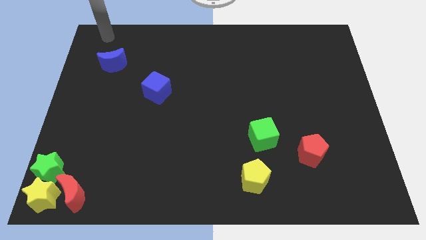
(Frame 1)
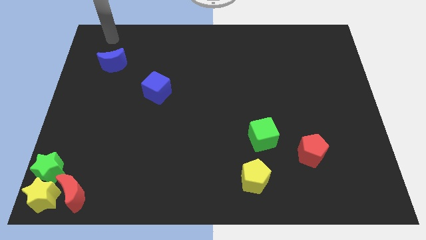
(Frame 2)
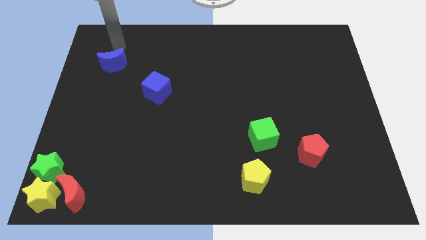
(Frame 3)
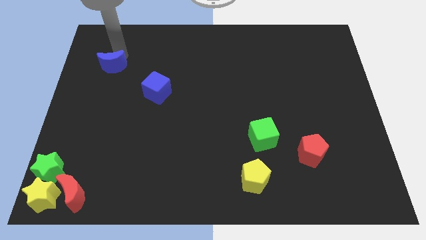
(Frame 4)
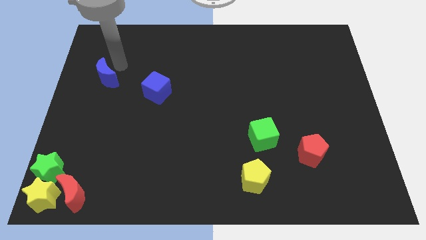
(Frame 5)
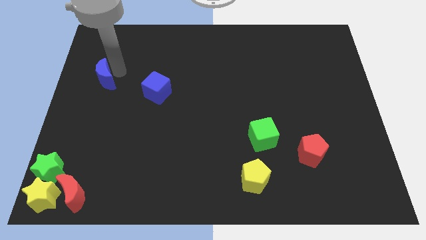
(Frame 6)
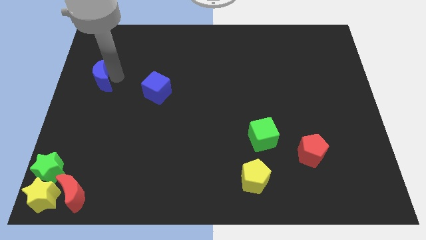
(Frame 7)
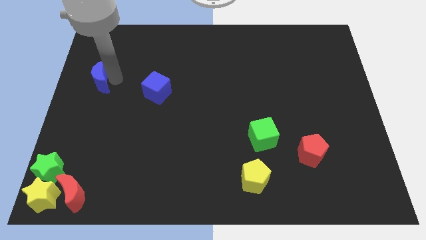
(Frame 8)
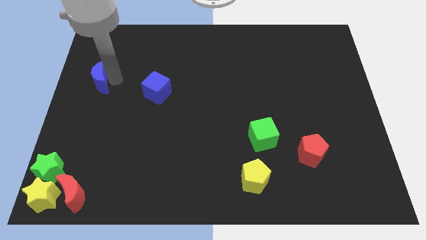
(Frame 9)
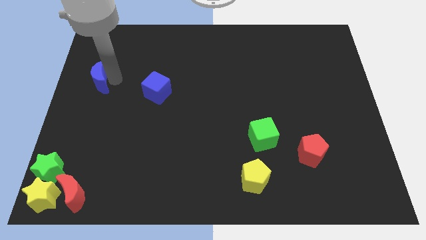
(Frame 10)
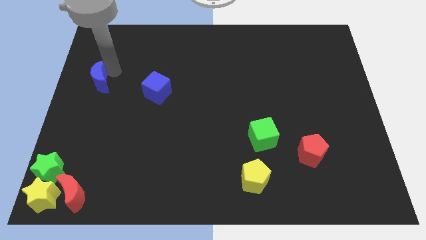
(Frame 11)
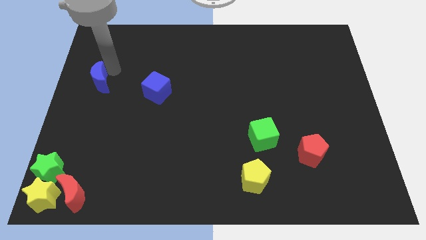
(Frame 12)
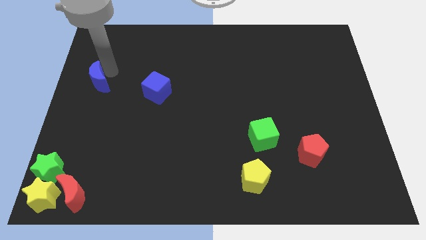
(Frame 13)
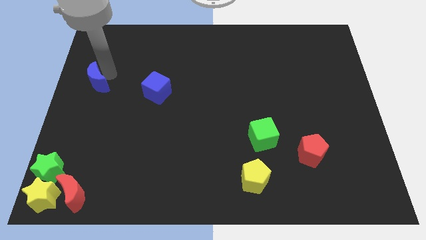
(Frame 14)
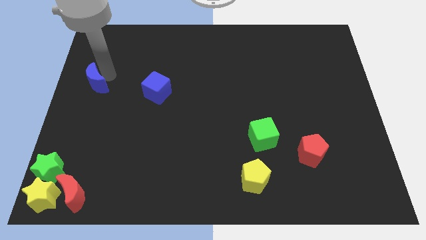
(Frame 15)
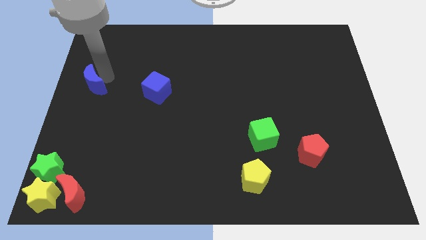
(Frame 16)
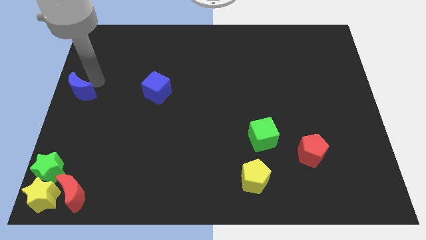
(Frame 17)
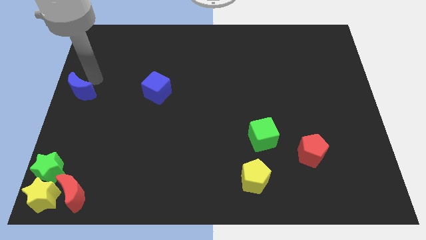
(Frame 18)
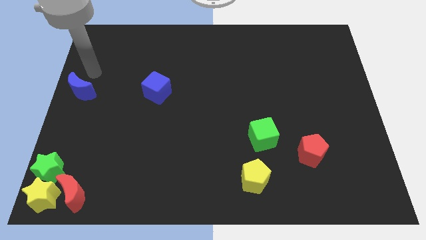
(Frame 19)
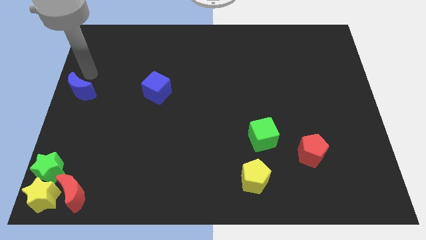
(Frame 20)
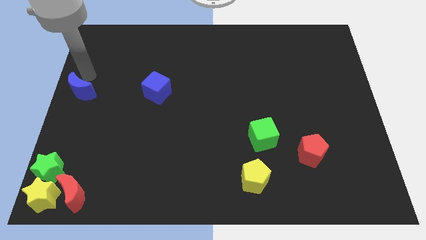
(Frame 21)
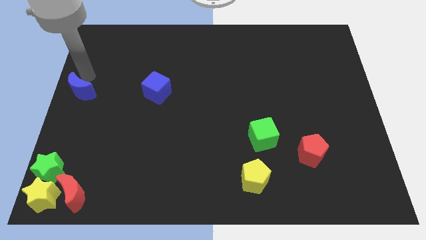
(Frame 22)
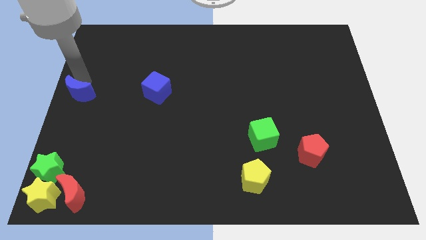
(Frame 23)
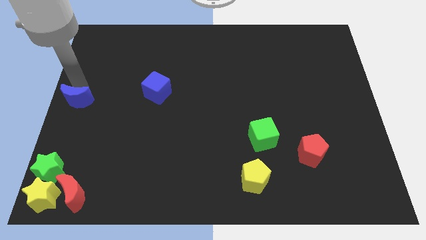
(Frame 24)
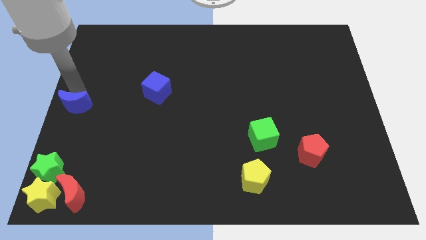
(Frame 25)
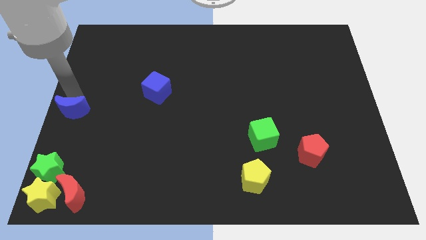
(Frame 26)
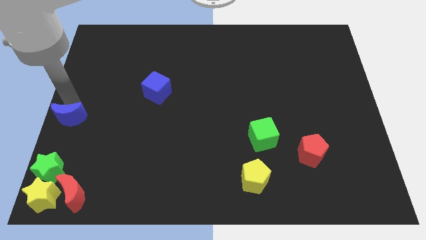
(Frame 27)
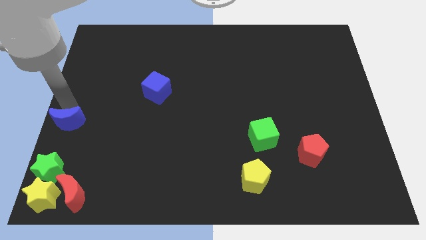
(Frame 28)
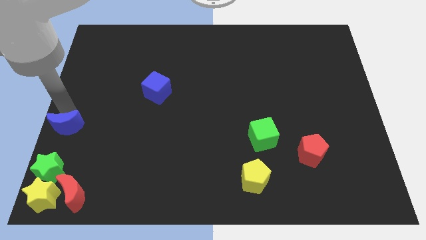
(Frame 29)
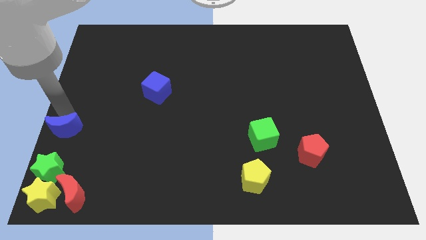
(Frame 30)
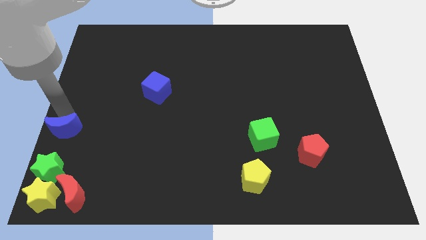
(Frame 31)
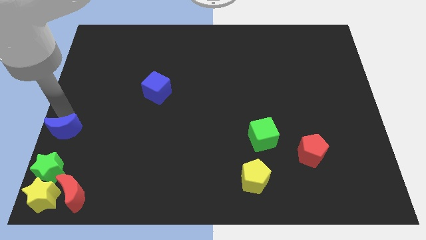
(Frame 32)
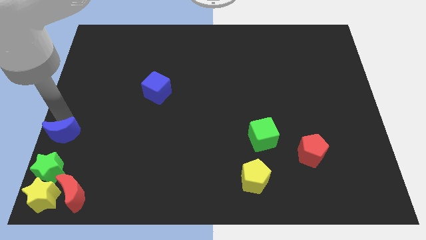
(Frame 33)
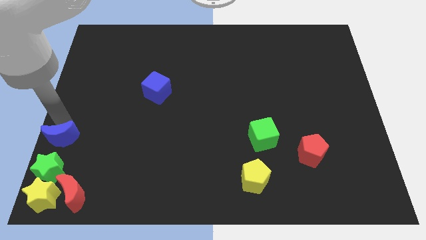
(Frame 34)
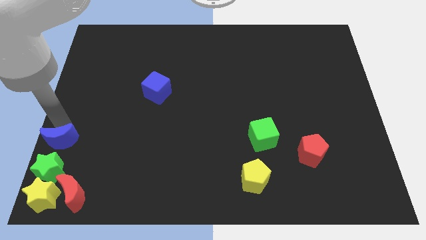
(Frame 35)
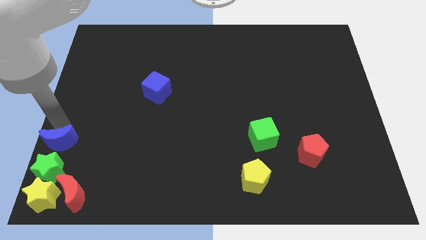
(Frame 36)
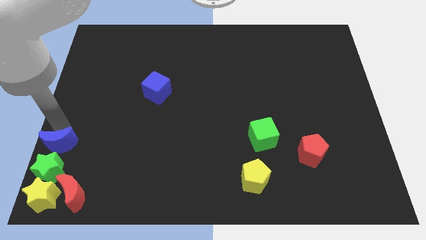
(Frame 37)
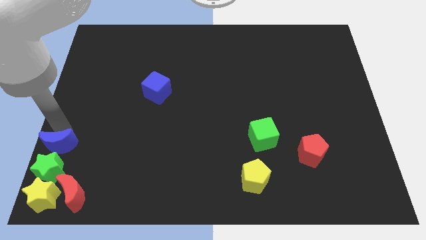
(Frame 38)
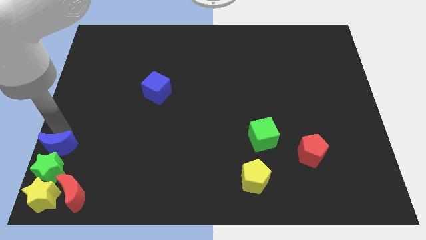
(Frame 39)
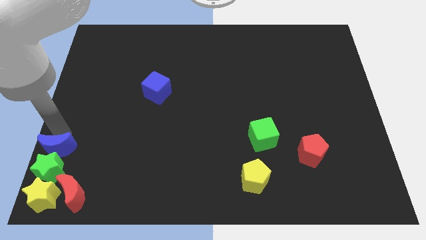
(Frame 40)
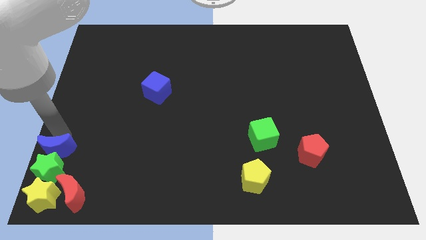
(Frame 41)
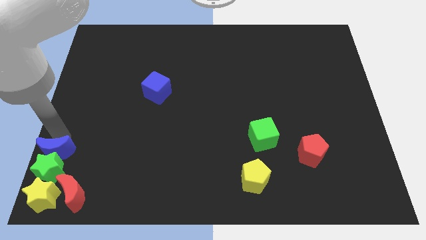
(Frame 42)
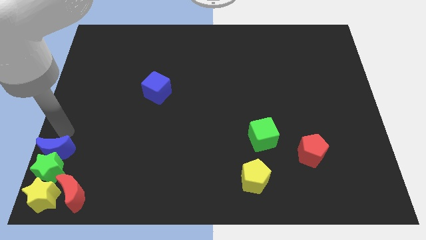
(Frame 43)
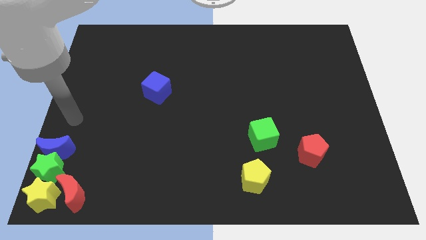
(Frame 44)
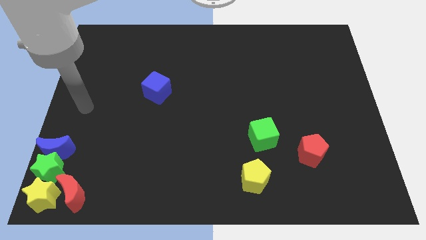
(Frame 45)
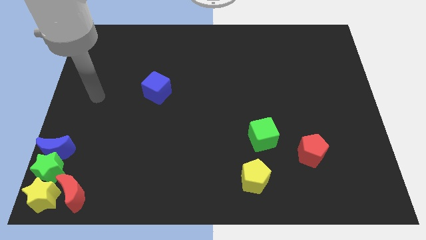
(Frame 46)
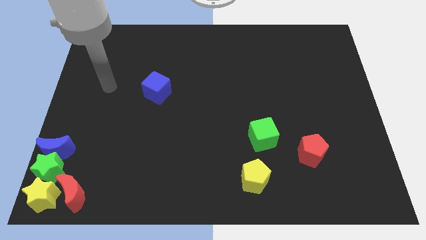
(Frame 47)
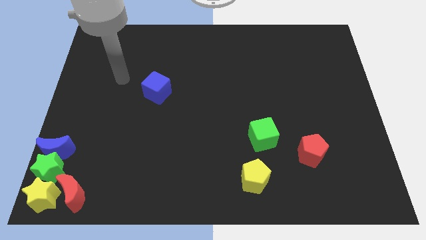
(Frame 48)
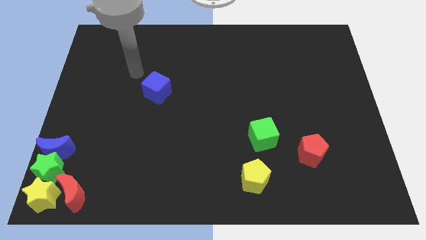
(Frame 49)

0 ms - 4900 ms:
place the blue crescent above the green star

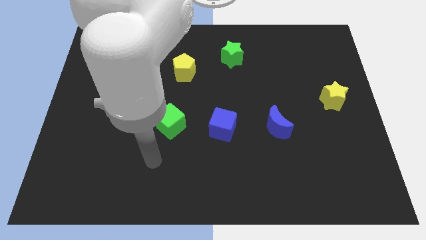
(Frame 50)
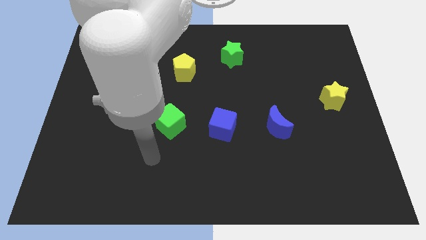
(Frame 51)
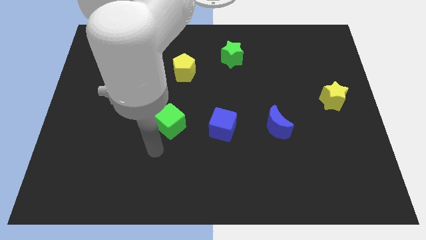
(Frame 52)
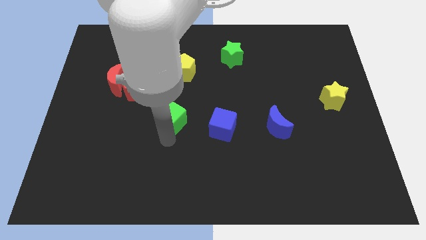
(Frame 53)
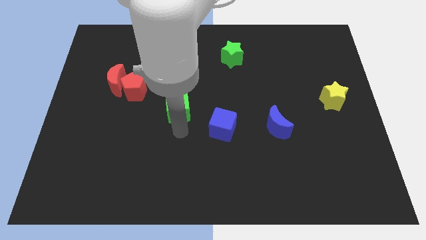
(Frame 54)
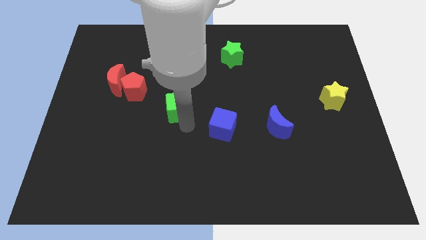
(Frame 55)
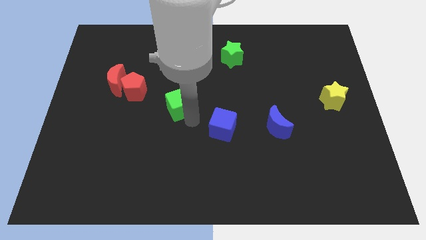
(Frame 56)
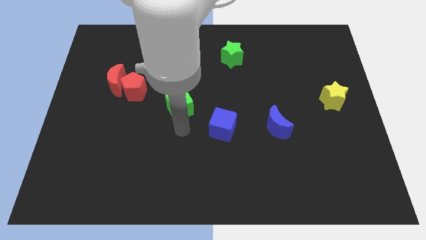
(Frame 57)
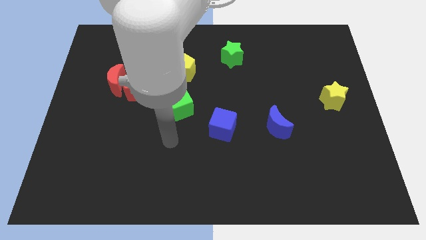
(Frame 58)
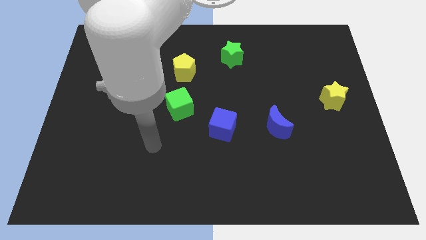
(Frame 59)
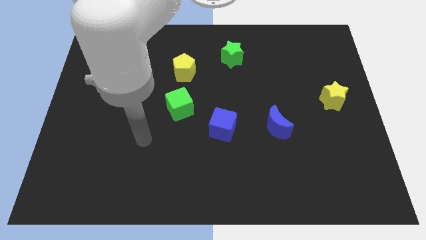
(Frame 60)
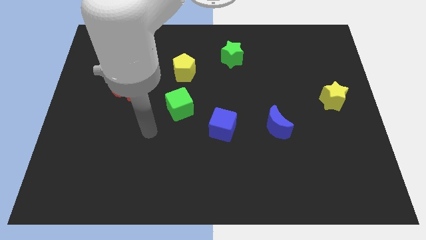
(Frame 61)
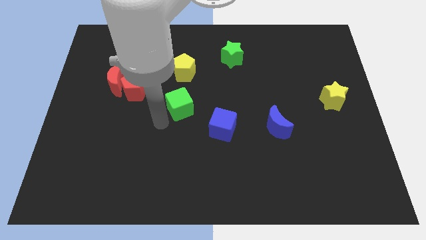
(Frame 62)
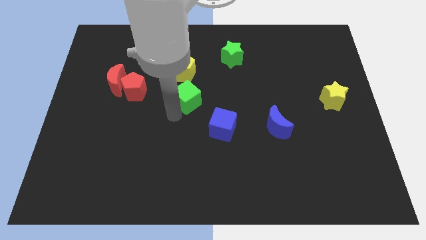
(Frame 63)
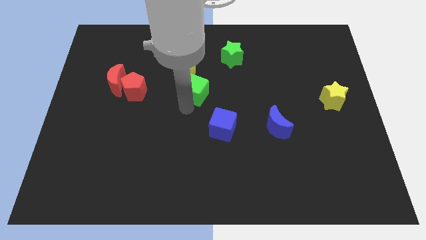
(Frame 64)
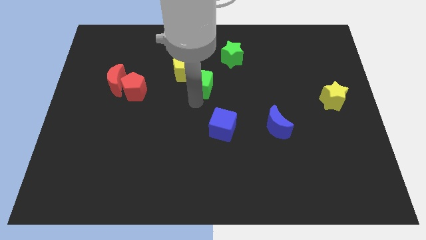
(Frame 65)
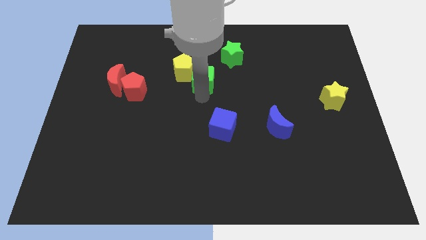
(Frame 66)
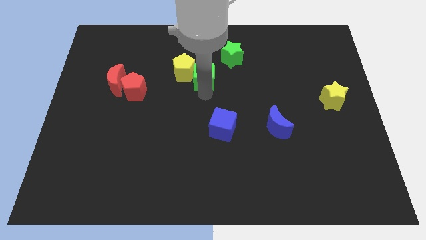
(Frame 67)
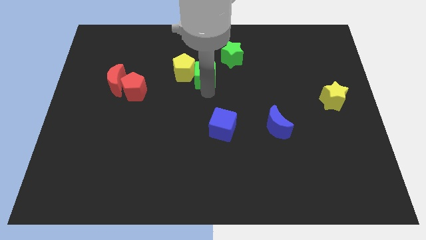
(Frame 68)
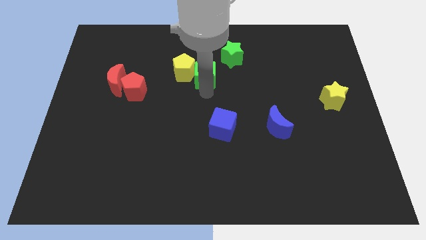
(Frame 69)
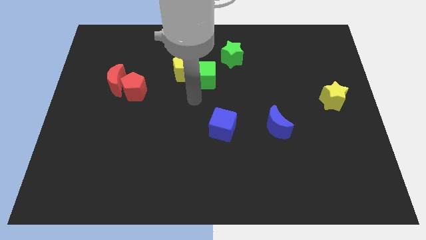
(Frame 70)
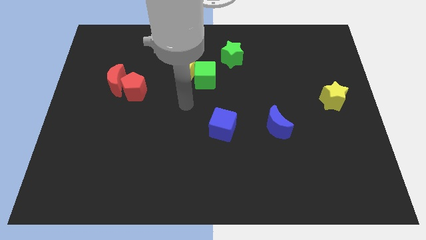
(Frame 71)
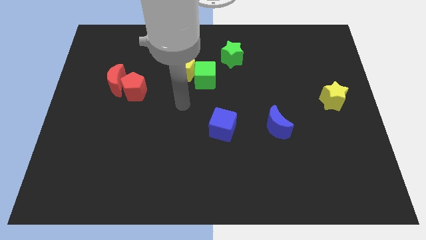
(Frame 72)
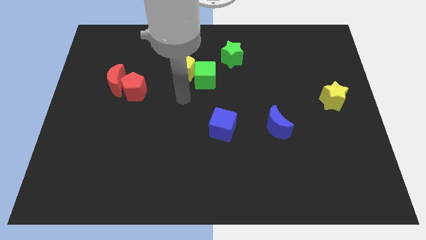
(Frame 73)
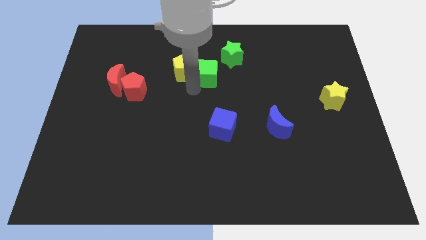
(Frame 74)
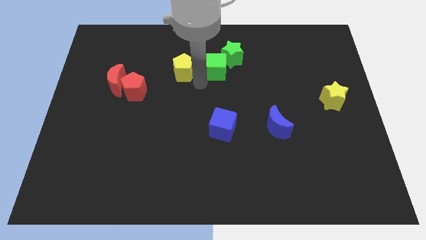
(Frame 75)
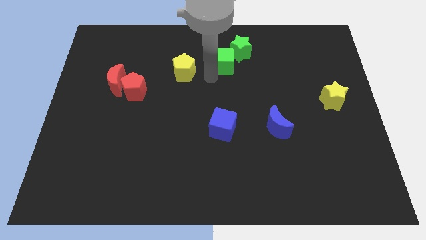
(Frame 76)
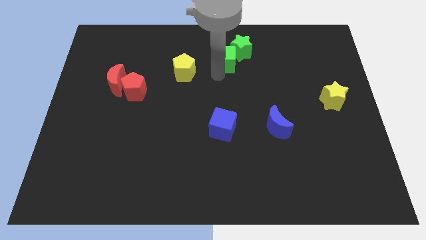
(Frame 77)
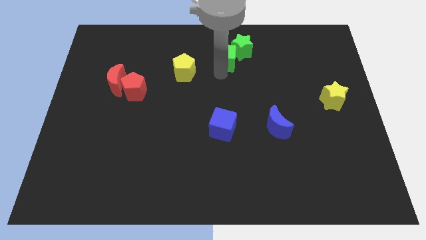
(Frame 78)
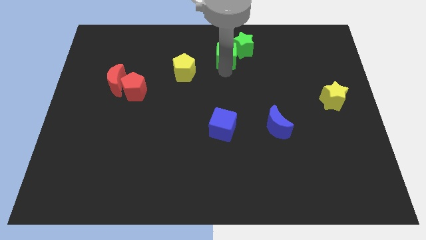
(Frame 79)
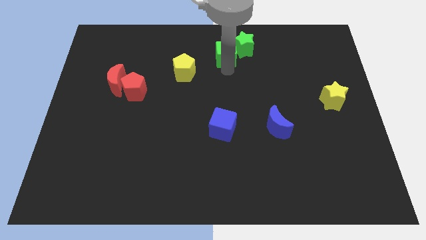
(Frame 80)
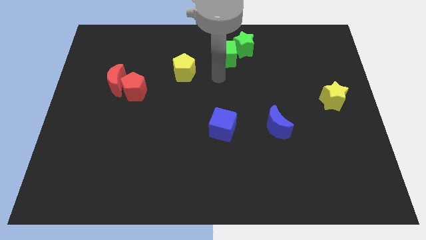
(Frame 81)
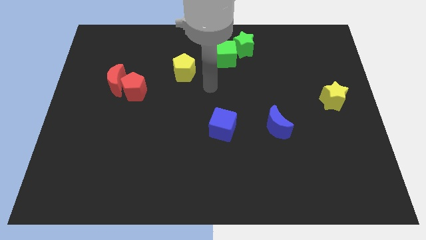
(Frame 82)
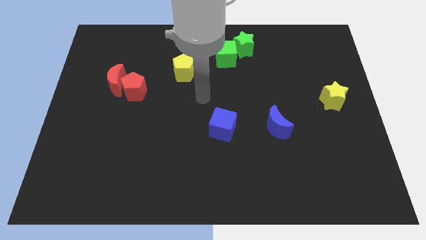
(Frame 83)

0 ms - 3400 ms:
move the green cube into the green star diagonally

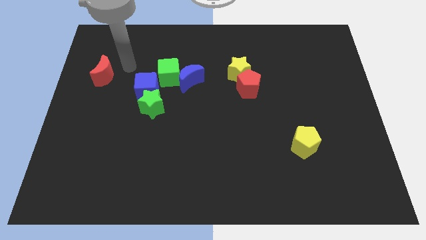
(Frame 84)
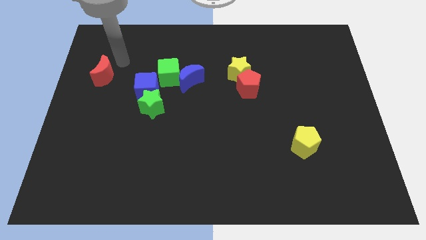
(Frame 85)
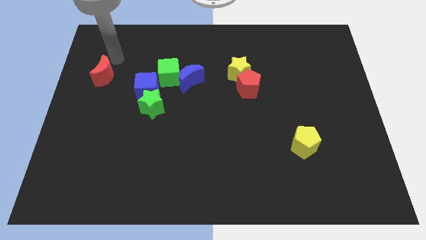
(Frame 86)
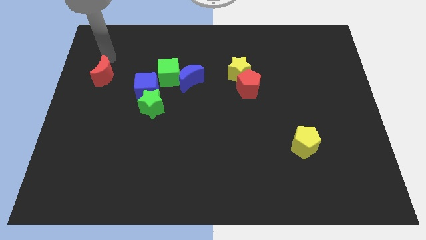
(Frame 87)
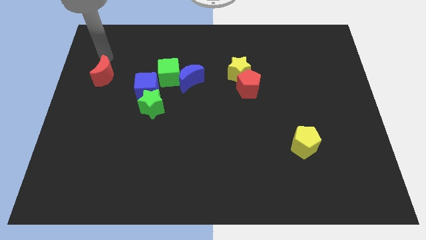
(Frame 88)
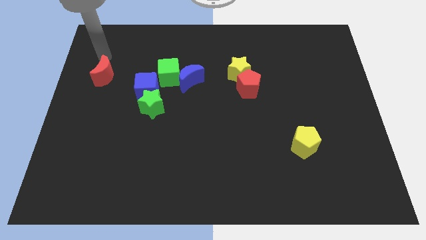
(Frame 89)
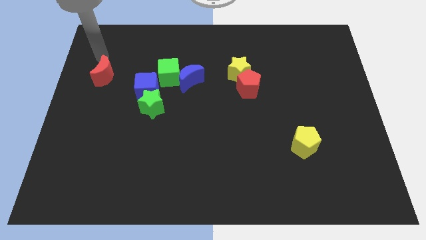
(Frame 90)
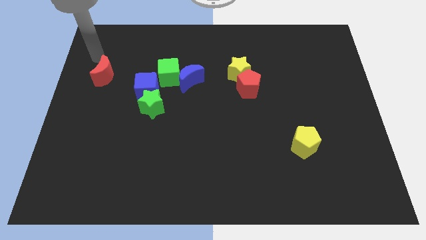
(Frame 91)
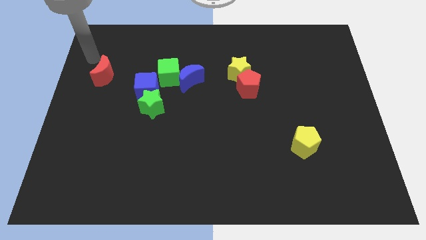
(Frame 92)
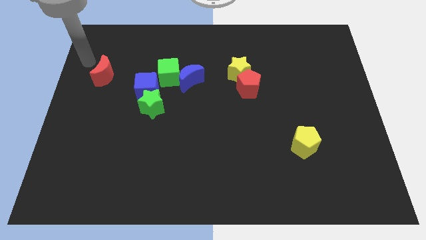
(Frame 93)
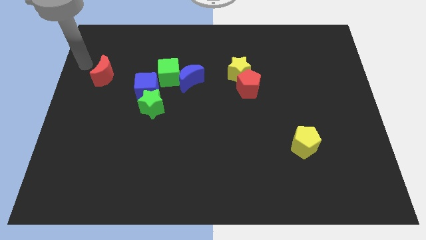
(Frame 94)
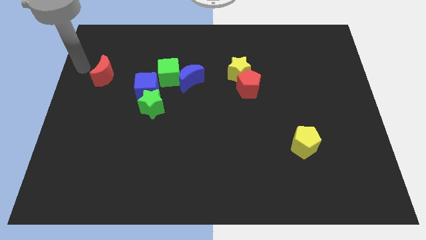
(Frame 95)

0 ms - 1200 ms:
place your hand at the left side of the red moon
